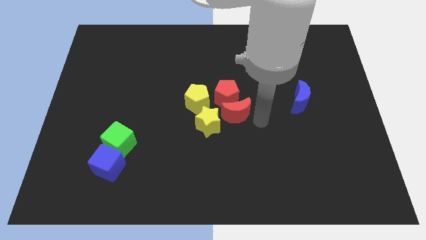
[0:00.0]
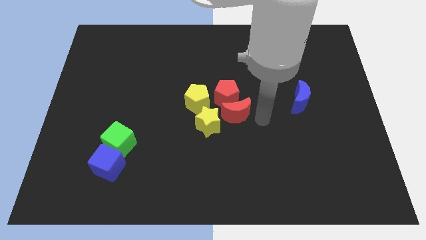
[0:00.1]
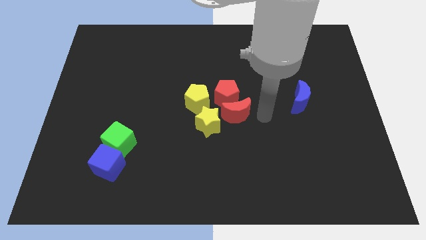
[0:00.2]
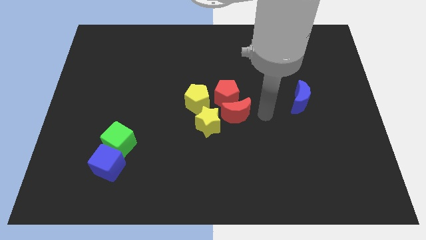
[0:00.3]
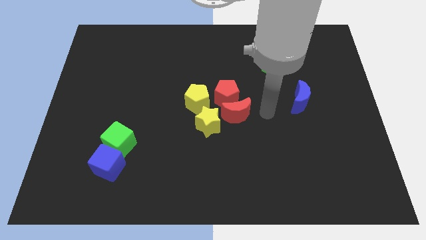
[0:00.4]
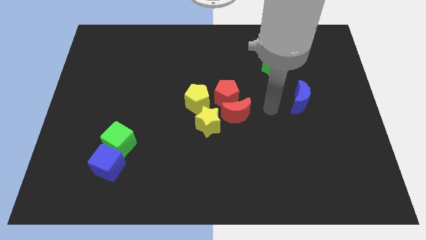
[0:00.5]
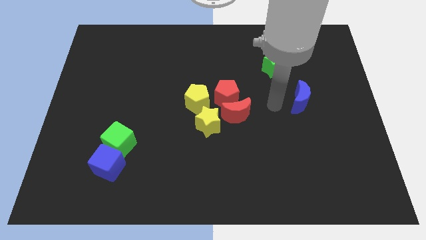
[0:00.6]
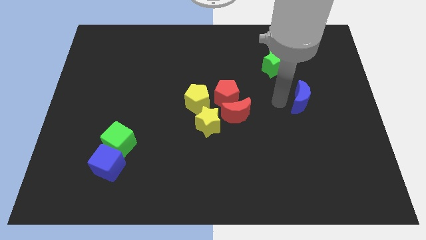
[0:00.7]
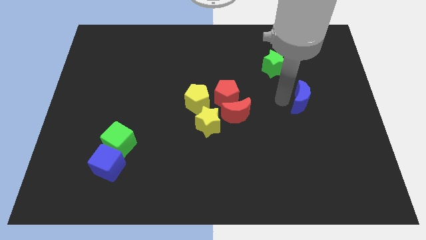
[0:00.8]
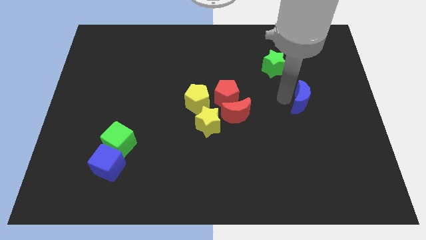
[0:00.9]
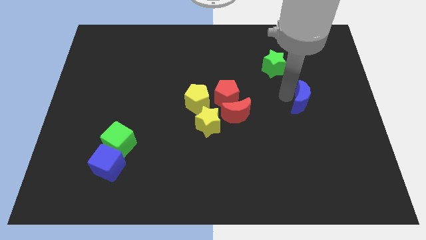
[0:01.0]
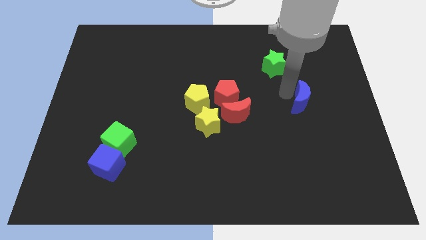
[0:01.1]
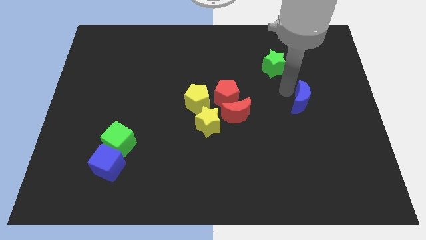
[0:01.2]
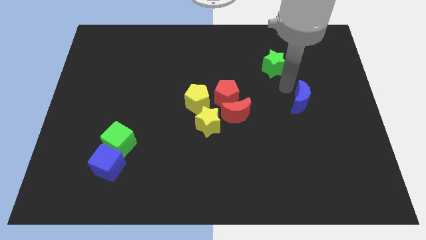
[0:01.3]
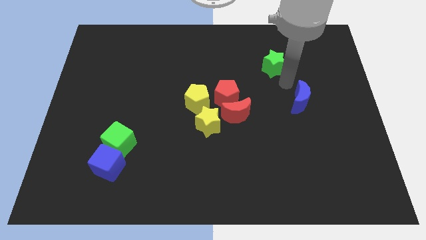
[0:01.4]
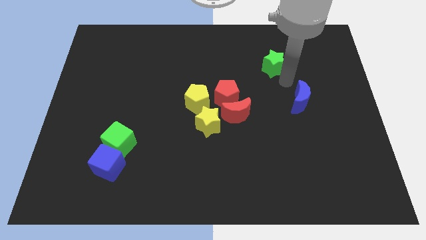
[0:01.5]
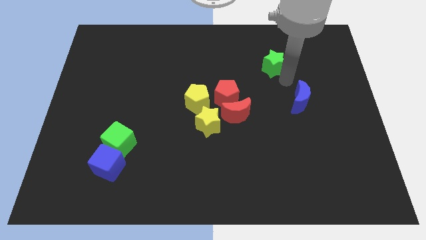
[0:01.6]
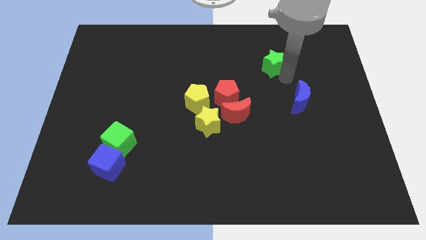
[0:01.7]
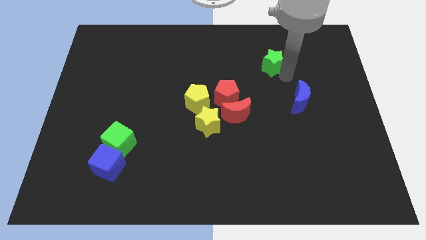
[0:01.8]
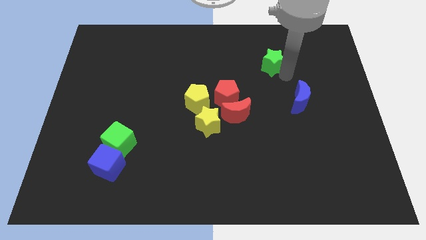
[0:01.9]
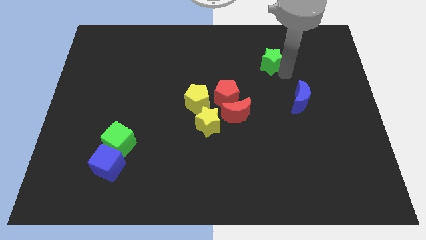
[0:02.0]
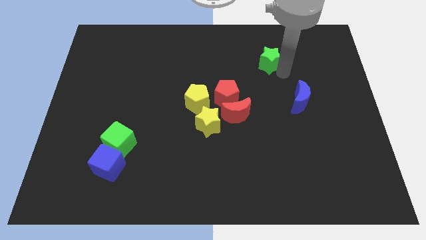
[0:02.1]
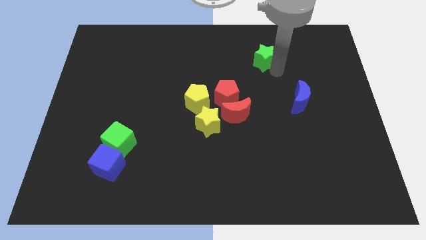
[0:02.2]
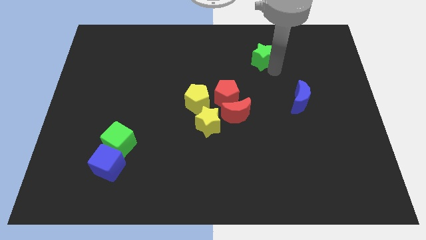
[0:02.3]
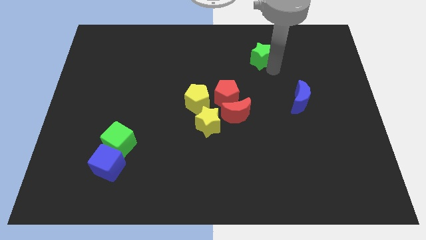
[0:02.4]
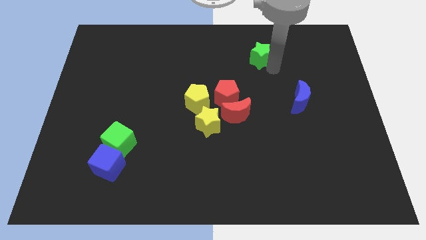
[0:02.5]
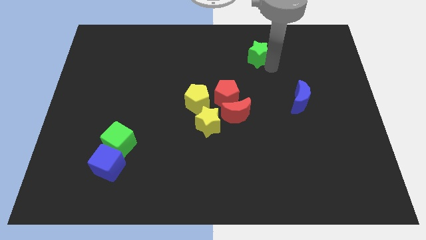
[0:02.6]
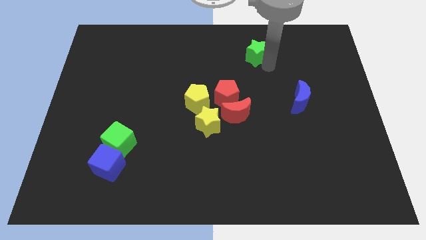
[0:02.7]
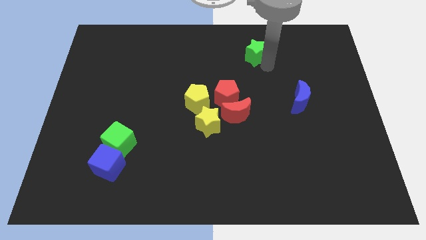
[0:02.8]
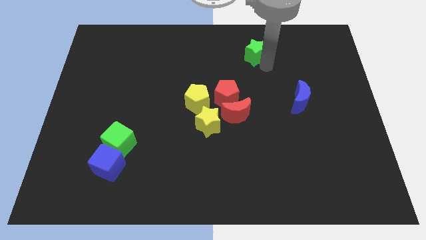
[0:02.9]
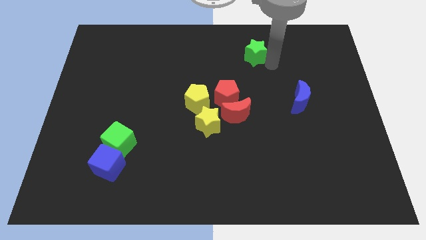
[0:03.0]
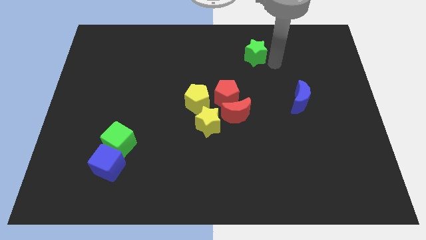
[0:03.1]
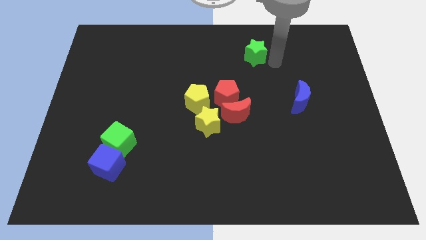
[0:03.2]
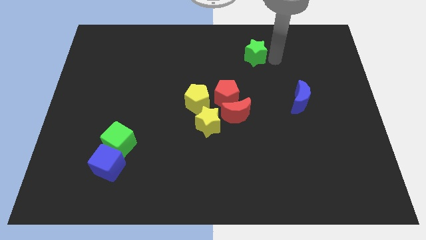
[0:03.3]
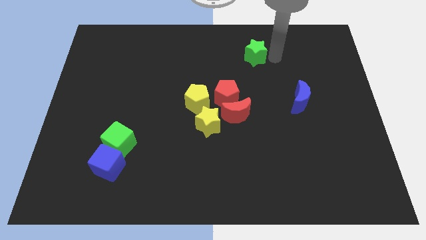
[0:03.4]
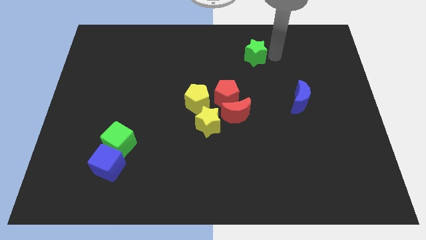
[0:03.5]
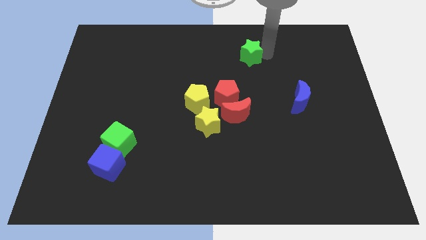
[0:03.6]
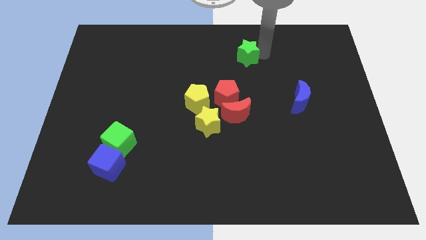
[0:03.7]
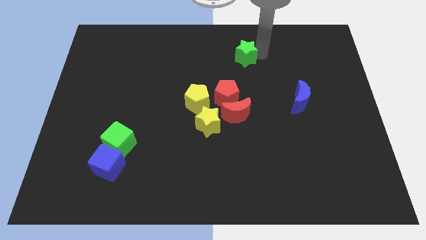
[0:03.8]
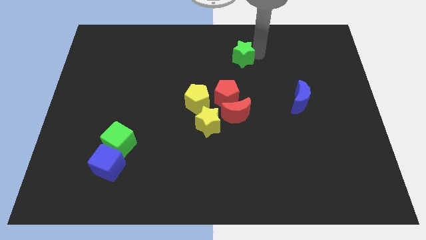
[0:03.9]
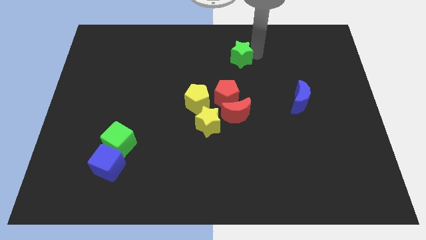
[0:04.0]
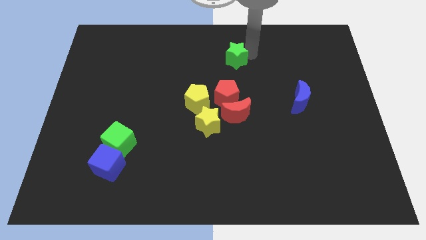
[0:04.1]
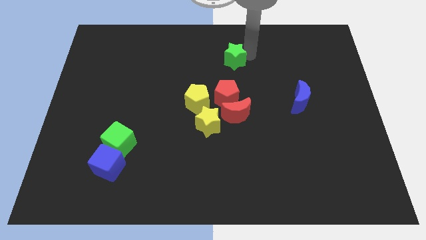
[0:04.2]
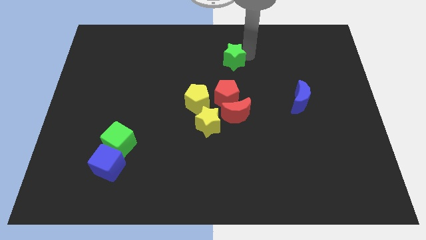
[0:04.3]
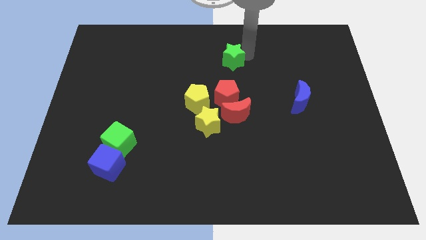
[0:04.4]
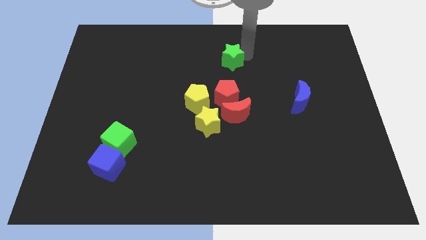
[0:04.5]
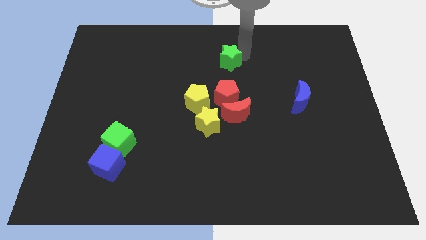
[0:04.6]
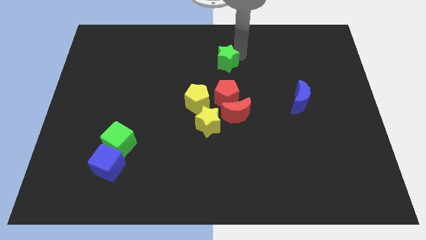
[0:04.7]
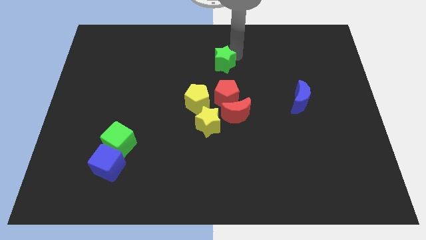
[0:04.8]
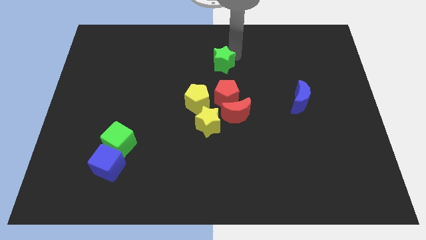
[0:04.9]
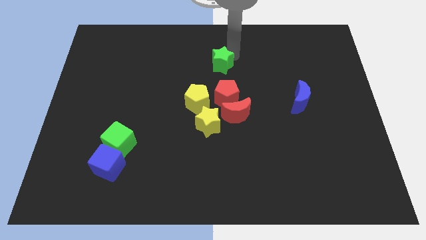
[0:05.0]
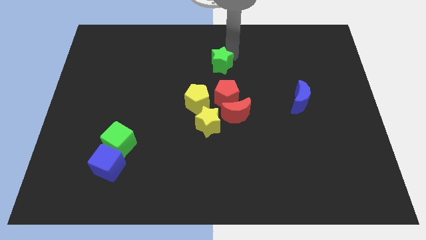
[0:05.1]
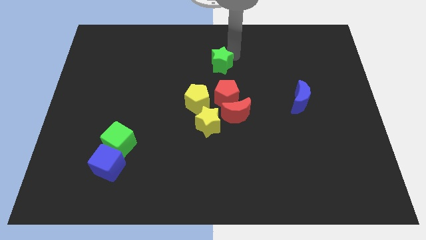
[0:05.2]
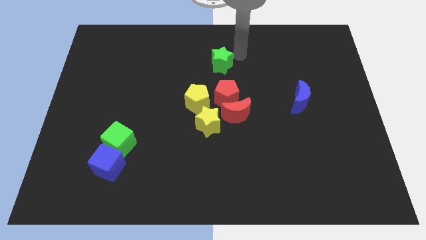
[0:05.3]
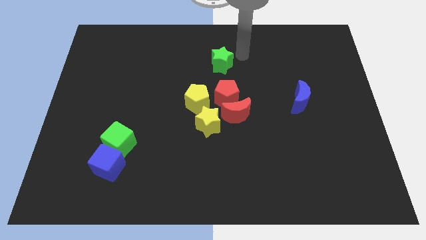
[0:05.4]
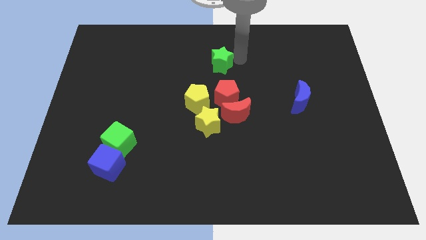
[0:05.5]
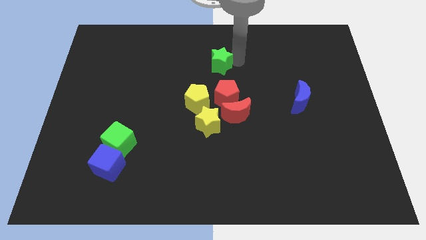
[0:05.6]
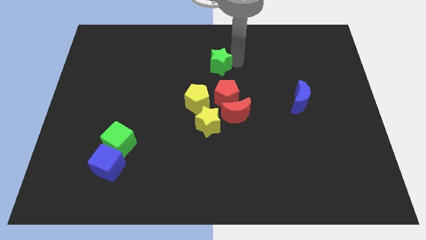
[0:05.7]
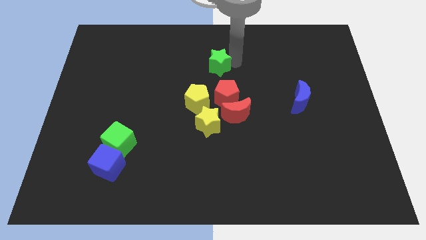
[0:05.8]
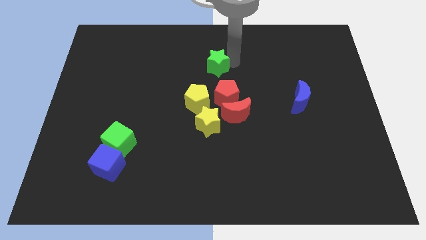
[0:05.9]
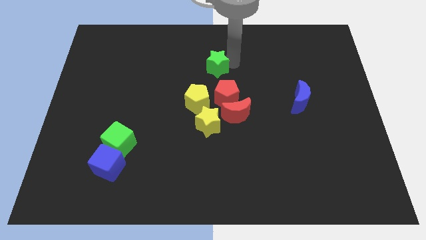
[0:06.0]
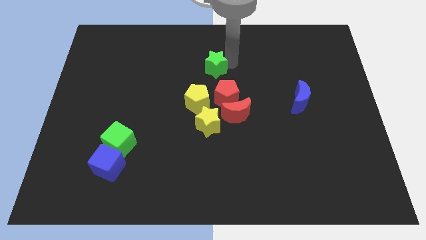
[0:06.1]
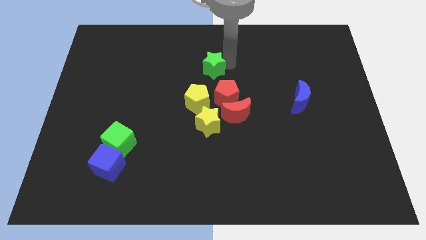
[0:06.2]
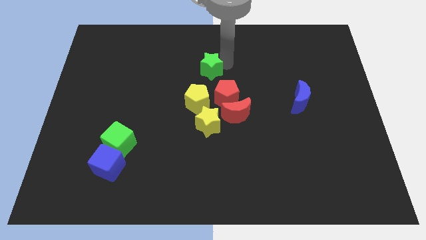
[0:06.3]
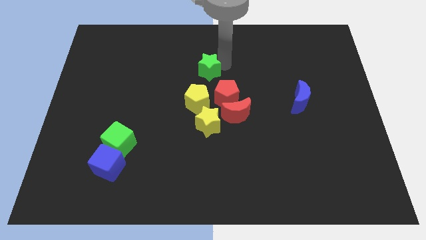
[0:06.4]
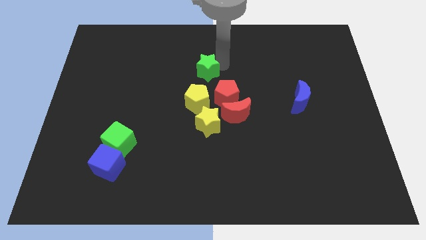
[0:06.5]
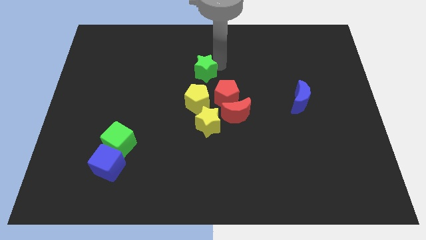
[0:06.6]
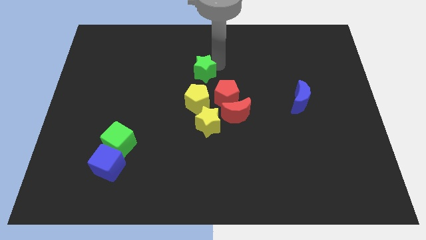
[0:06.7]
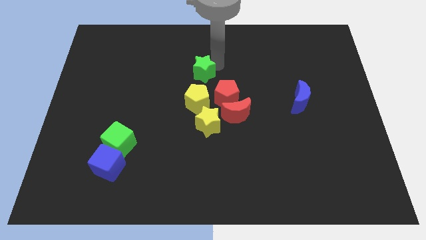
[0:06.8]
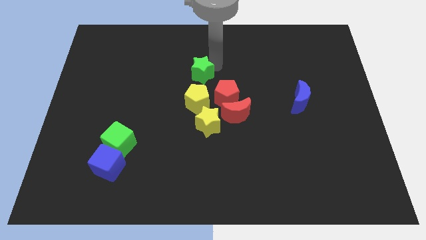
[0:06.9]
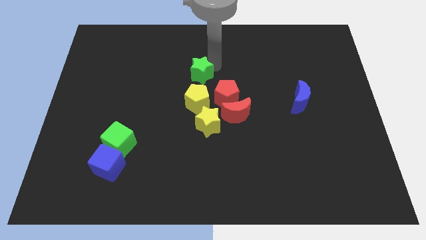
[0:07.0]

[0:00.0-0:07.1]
move the green star to the top of the yellow pentagon

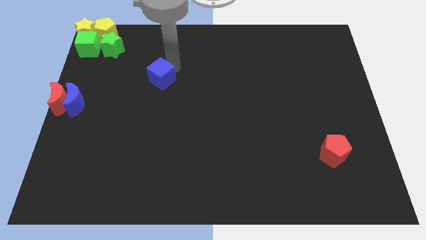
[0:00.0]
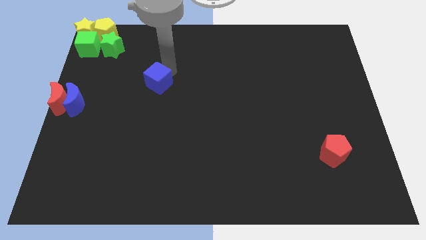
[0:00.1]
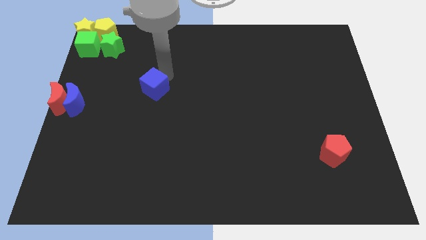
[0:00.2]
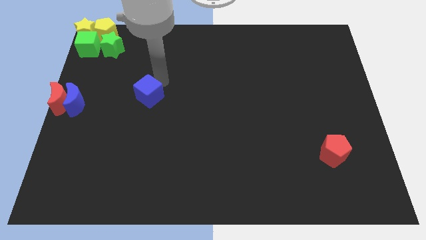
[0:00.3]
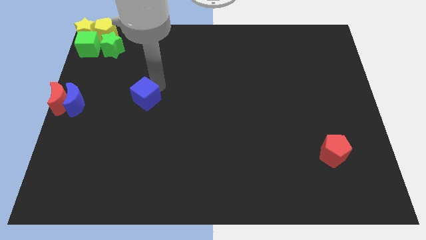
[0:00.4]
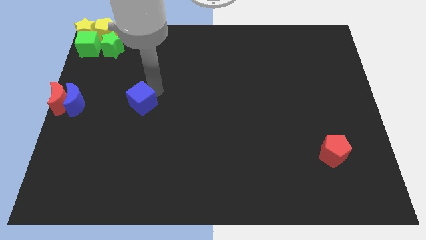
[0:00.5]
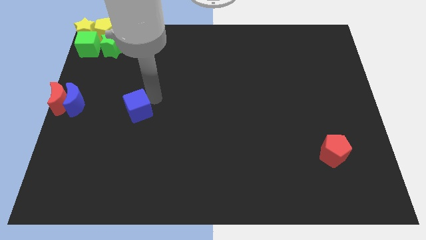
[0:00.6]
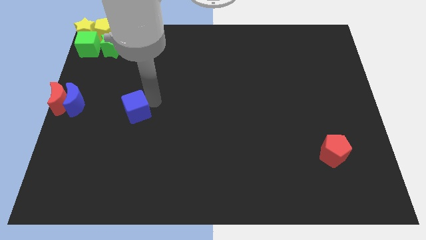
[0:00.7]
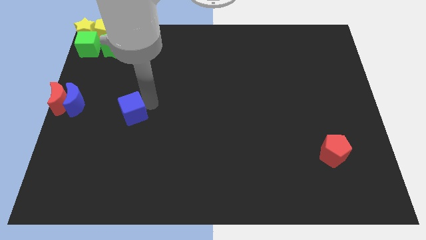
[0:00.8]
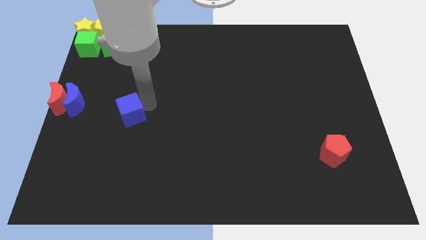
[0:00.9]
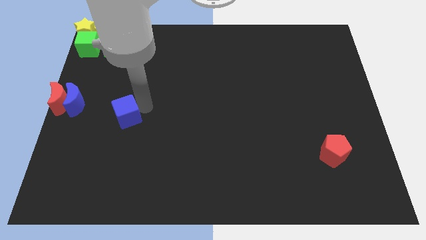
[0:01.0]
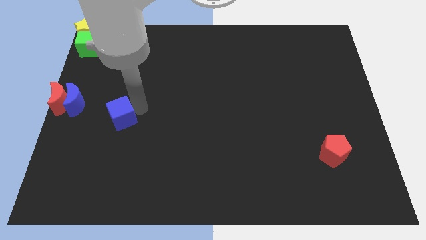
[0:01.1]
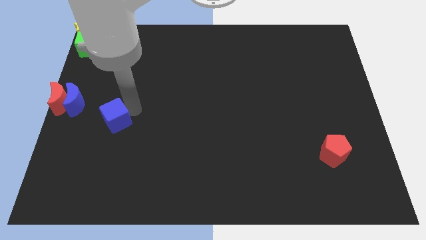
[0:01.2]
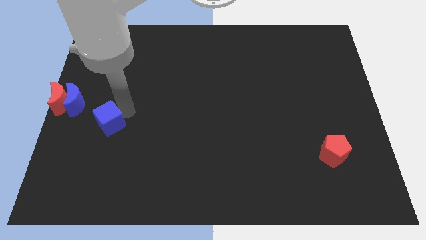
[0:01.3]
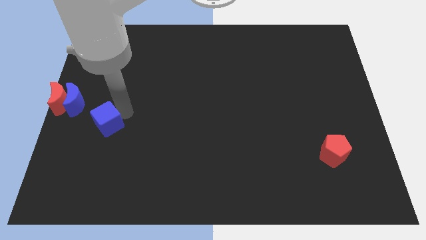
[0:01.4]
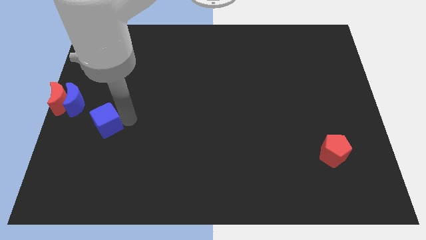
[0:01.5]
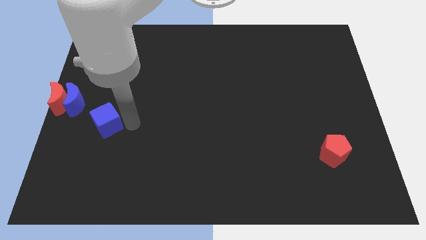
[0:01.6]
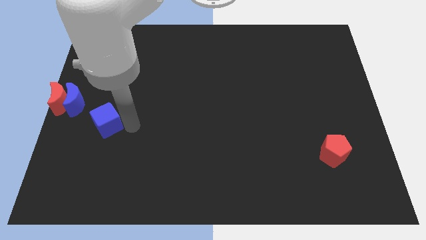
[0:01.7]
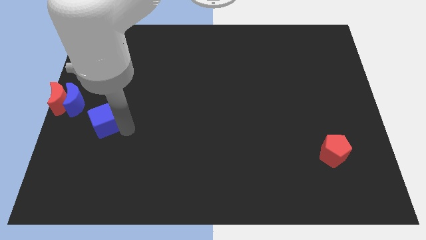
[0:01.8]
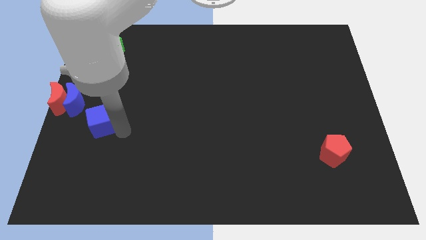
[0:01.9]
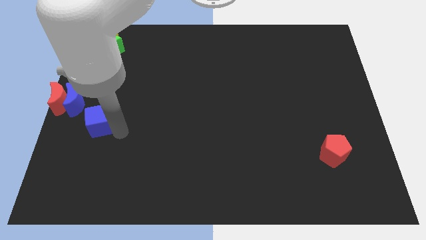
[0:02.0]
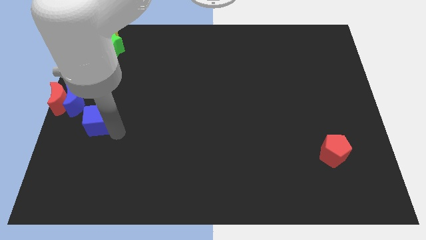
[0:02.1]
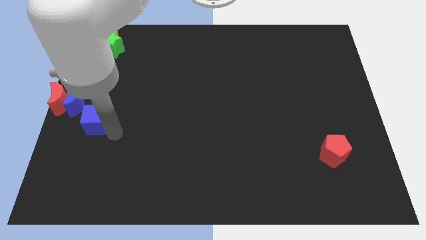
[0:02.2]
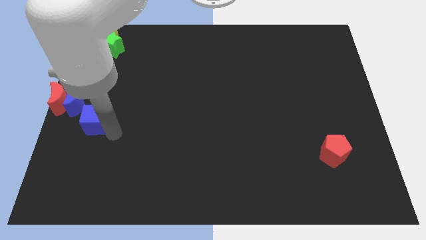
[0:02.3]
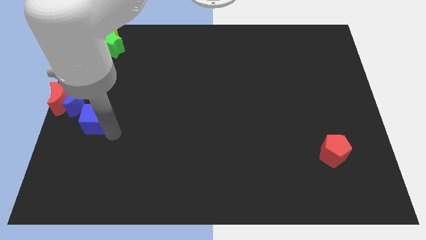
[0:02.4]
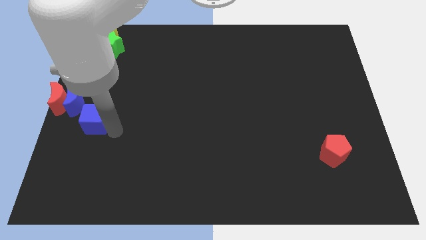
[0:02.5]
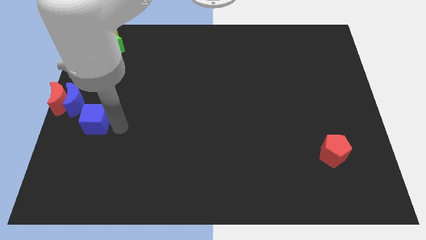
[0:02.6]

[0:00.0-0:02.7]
push the blue cube to the bottom right side of the blue moon
